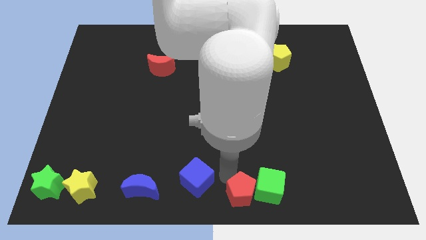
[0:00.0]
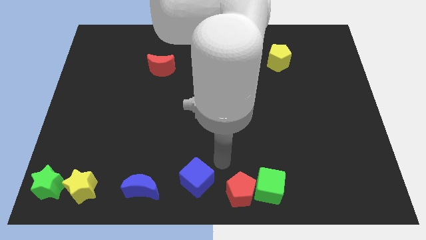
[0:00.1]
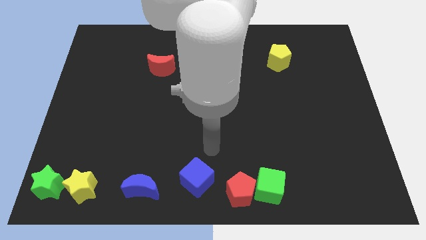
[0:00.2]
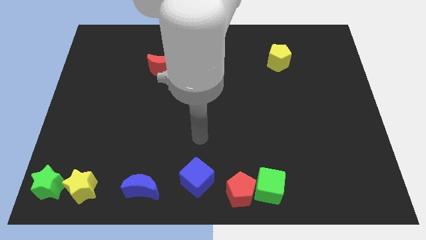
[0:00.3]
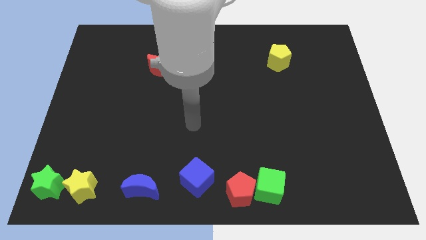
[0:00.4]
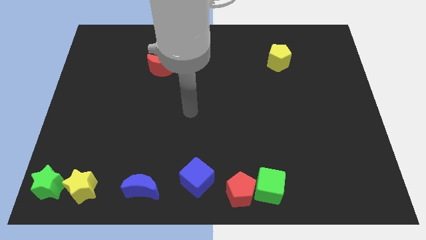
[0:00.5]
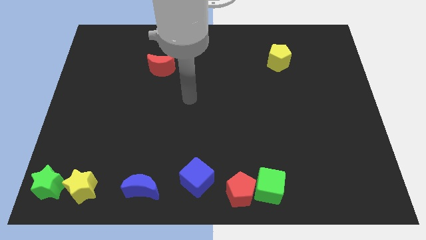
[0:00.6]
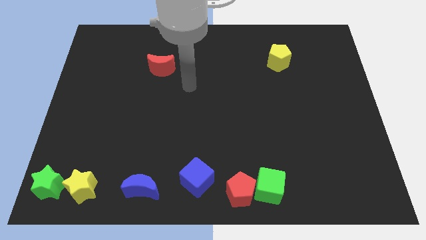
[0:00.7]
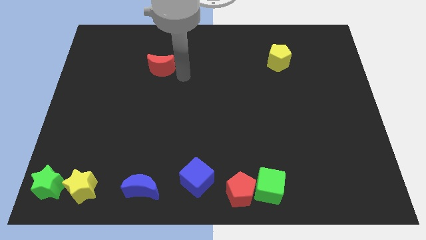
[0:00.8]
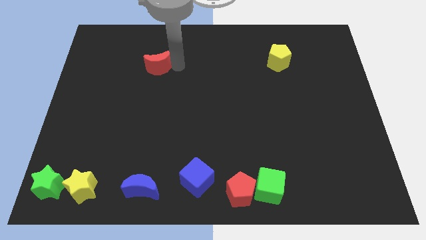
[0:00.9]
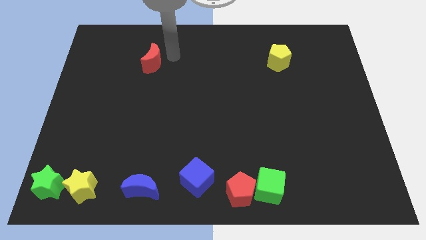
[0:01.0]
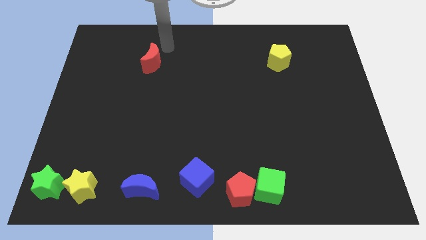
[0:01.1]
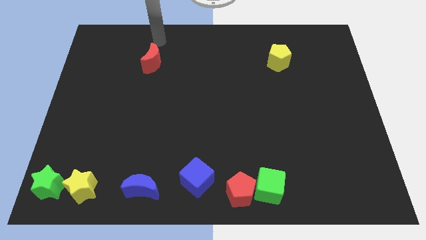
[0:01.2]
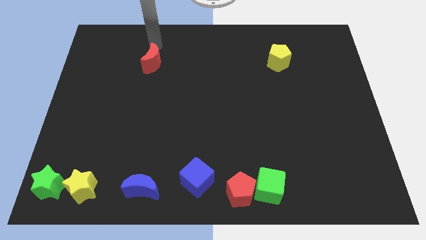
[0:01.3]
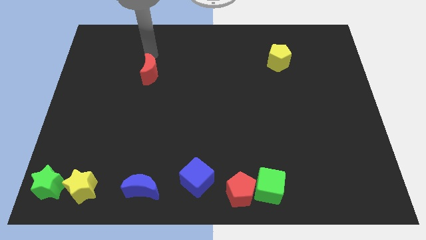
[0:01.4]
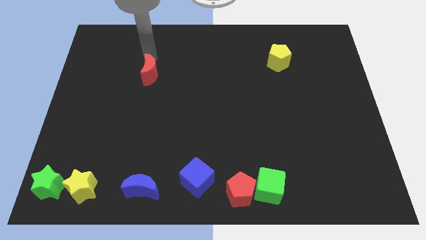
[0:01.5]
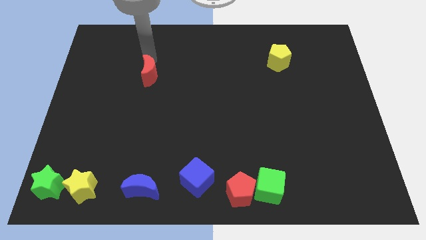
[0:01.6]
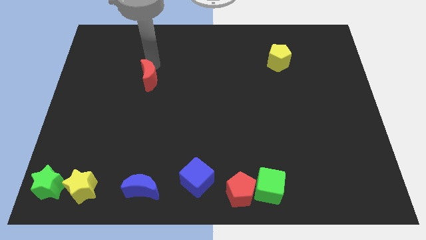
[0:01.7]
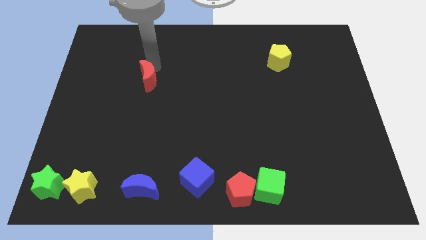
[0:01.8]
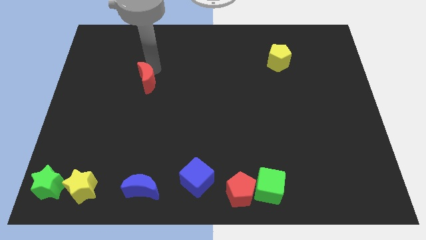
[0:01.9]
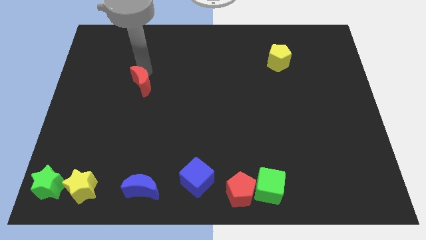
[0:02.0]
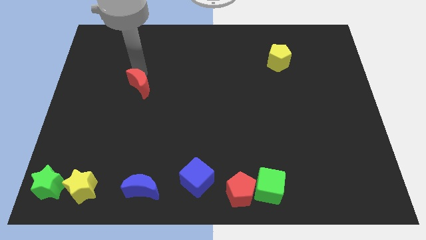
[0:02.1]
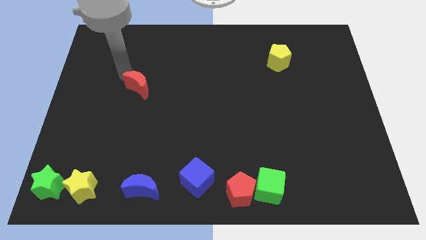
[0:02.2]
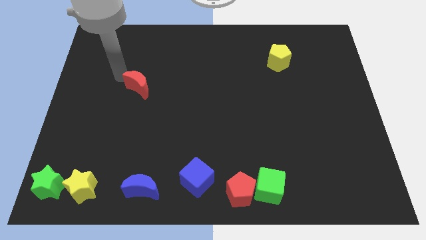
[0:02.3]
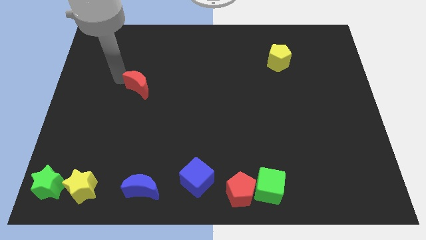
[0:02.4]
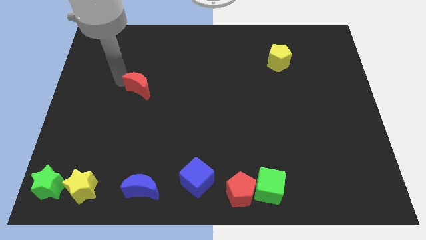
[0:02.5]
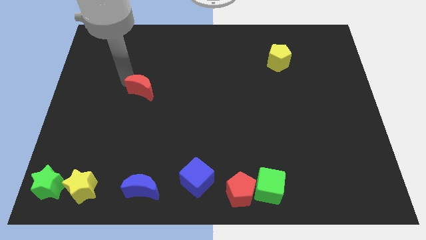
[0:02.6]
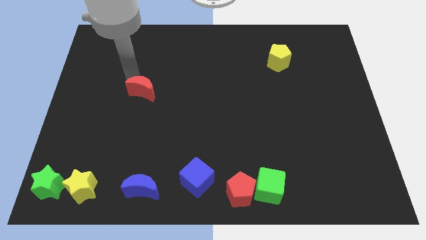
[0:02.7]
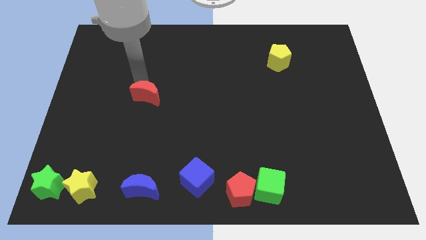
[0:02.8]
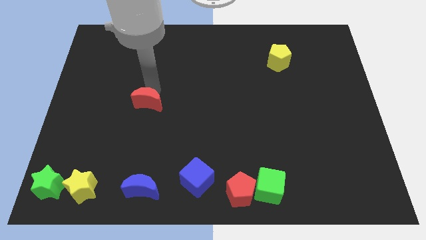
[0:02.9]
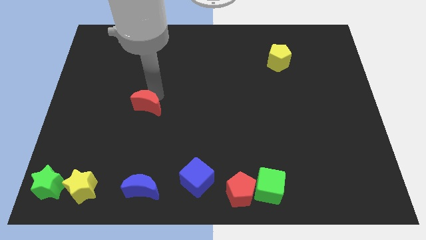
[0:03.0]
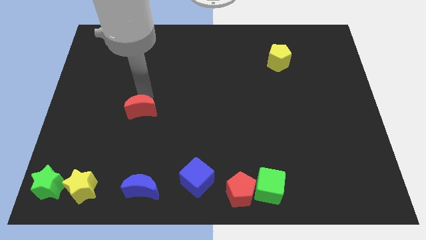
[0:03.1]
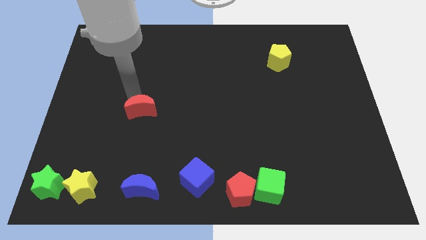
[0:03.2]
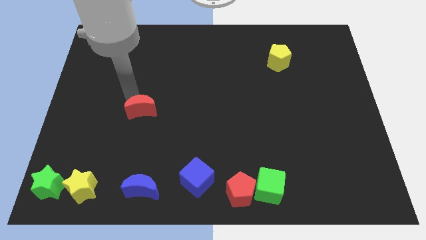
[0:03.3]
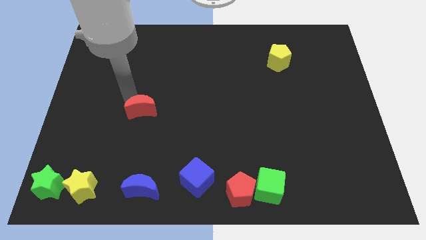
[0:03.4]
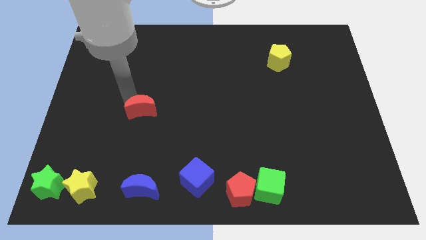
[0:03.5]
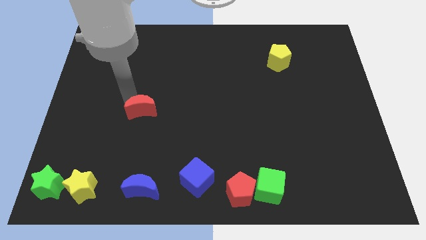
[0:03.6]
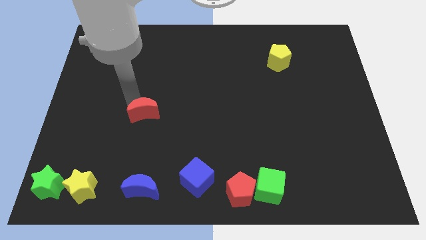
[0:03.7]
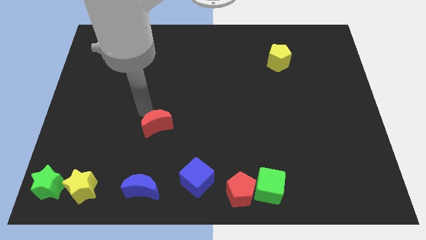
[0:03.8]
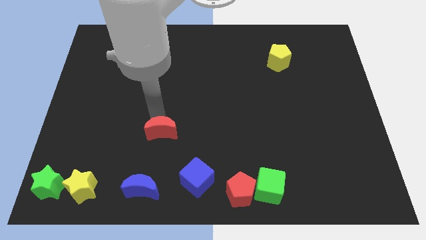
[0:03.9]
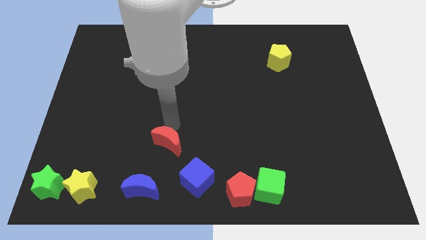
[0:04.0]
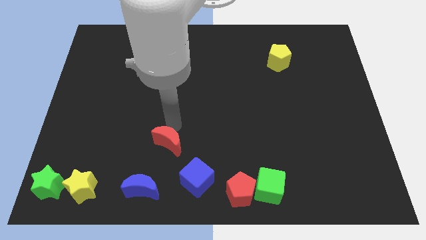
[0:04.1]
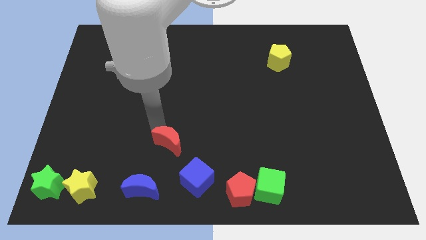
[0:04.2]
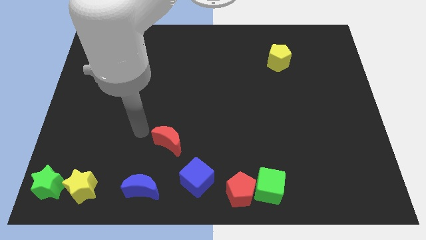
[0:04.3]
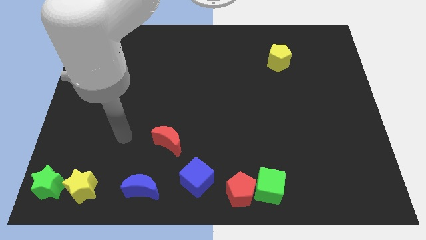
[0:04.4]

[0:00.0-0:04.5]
make a triangle out of blue blocks and the red moon

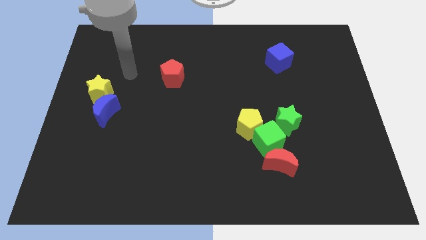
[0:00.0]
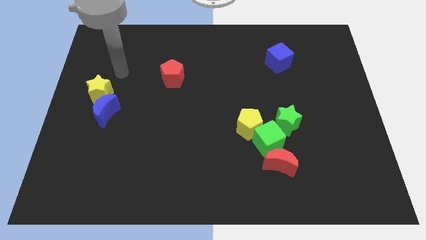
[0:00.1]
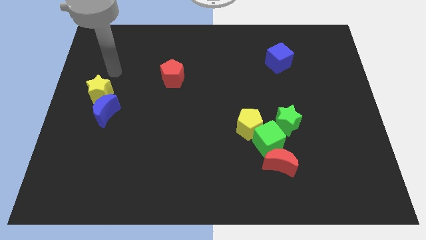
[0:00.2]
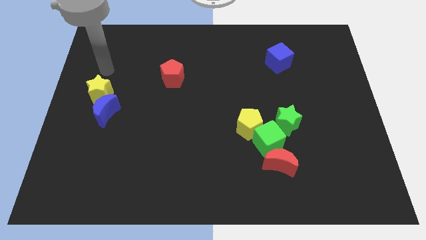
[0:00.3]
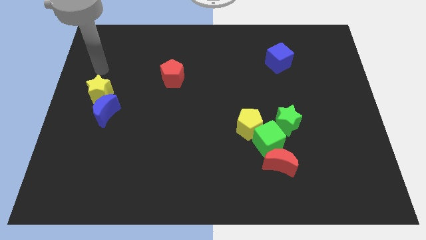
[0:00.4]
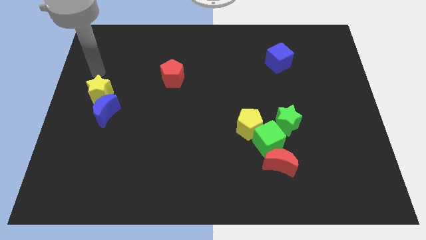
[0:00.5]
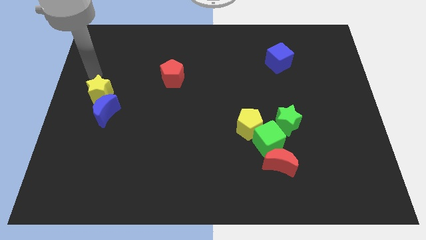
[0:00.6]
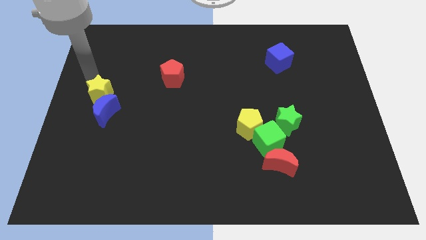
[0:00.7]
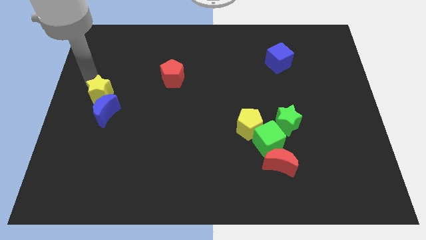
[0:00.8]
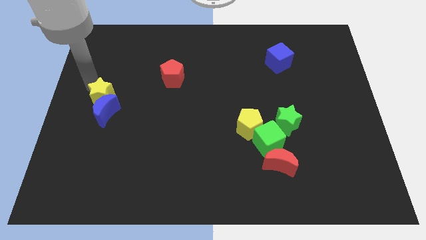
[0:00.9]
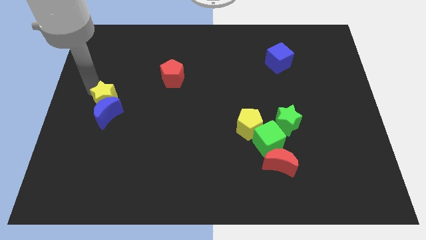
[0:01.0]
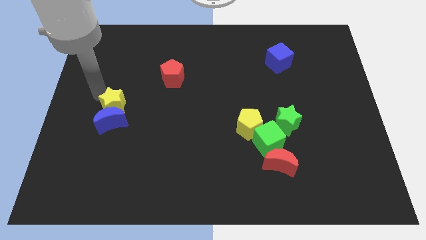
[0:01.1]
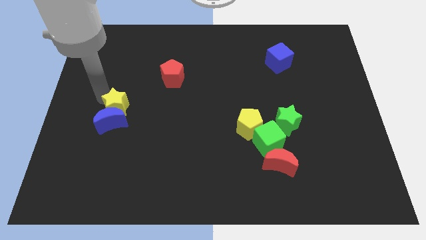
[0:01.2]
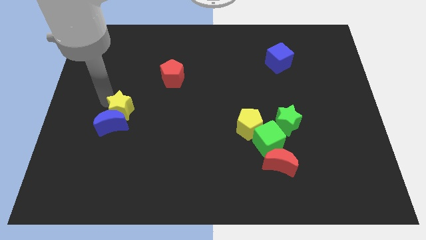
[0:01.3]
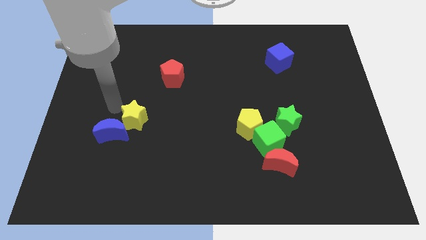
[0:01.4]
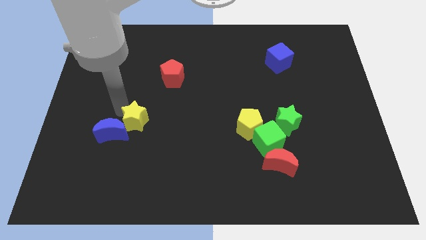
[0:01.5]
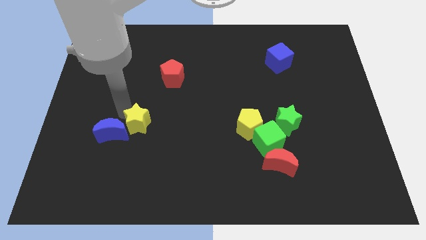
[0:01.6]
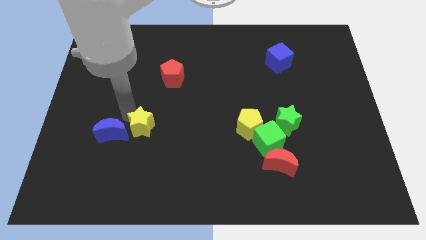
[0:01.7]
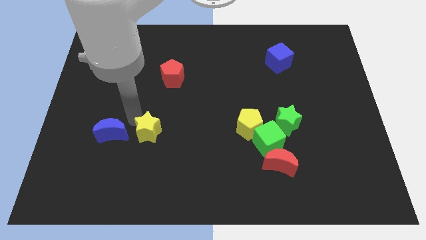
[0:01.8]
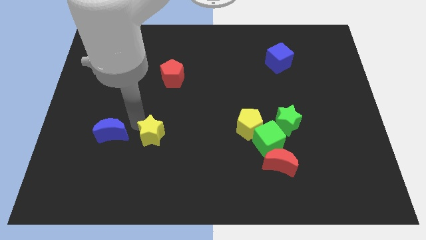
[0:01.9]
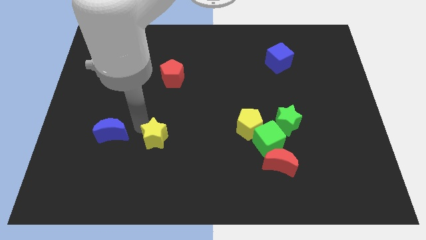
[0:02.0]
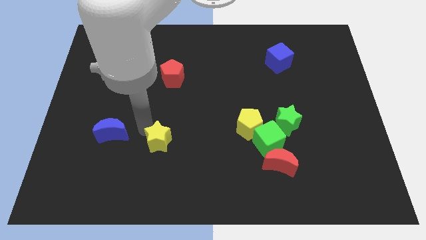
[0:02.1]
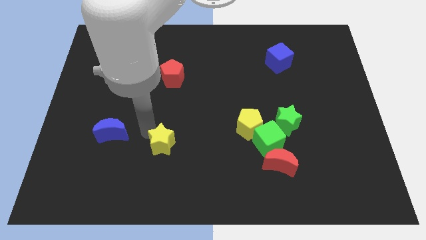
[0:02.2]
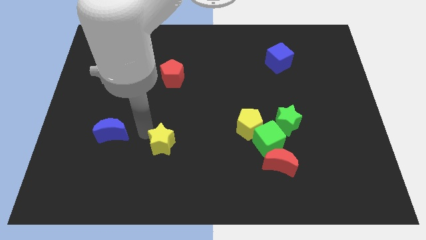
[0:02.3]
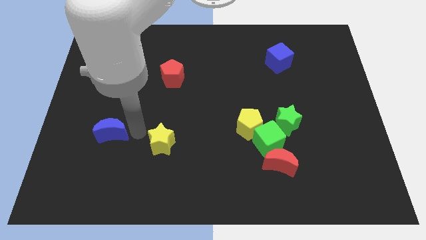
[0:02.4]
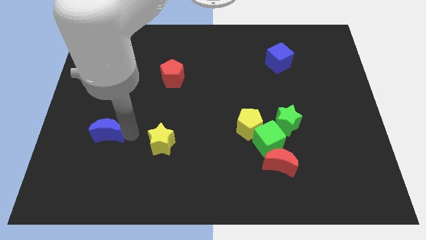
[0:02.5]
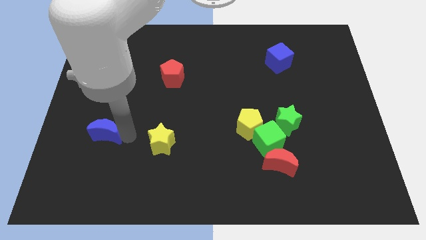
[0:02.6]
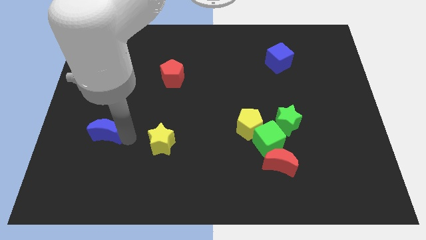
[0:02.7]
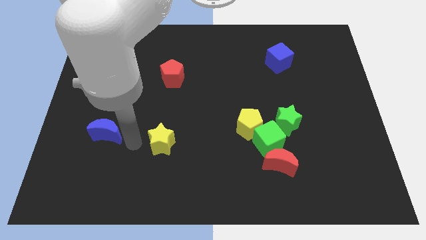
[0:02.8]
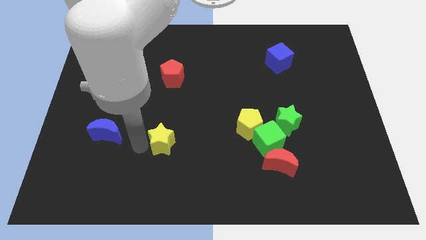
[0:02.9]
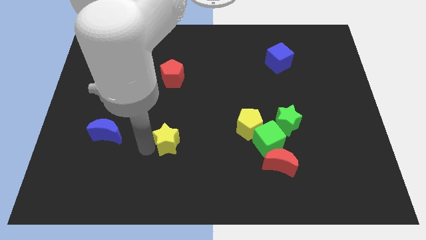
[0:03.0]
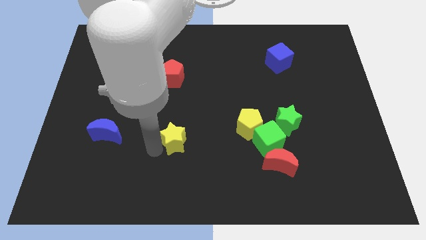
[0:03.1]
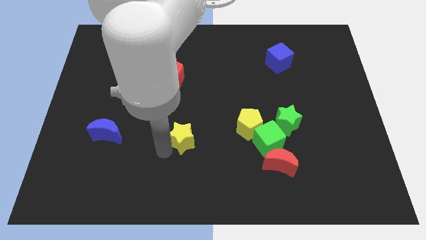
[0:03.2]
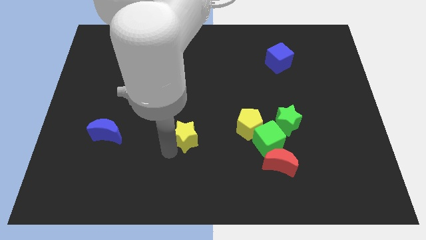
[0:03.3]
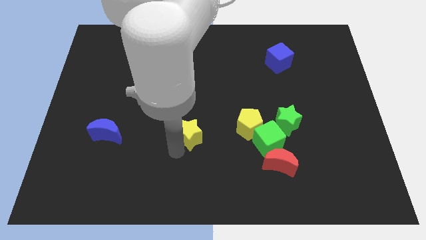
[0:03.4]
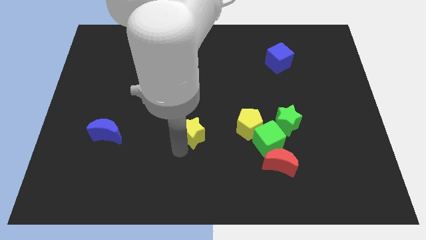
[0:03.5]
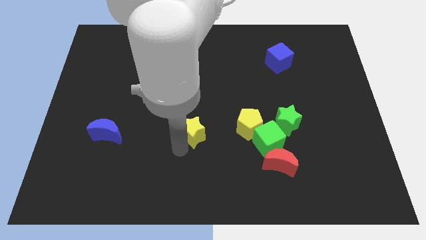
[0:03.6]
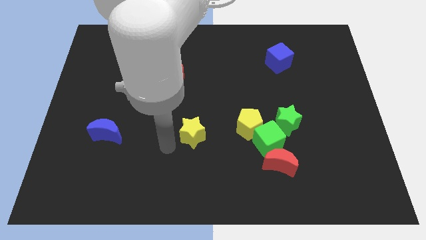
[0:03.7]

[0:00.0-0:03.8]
push the yellow star to the bottoom center

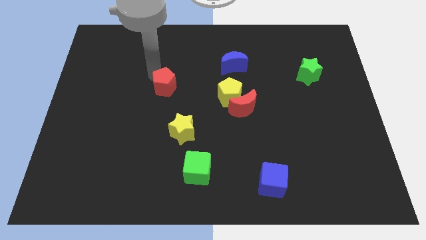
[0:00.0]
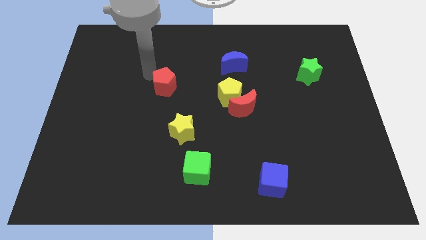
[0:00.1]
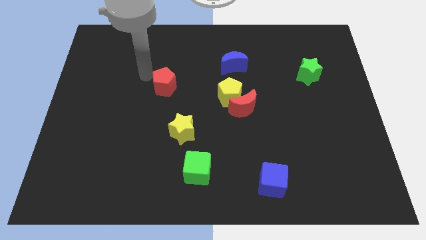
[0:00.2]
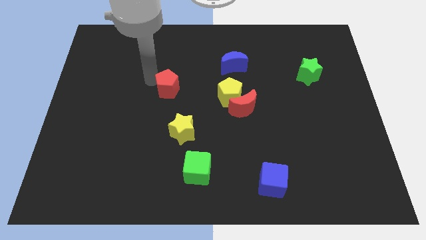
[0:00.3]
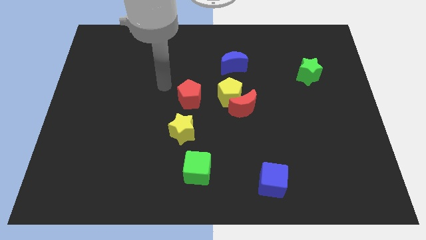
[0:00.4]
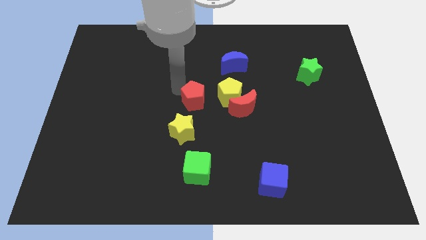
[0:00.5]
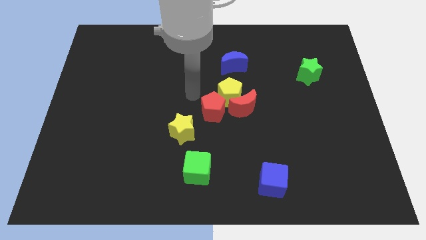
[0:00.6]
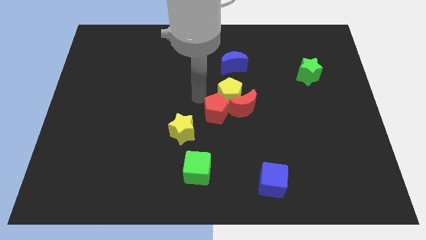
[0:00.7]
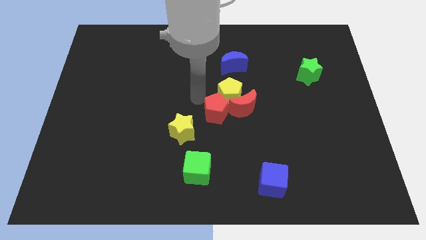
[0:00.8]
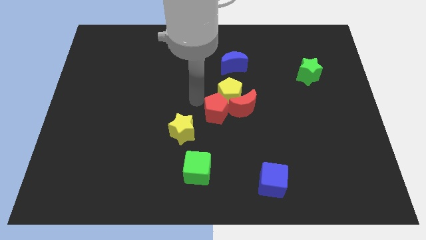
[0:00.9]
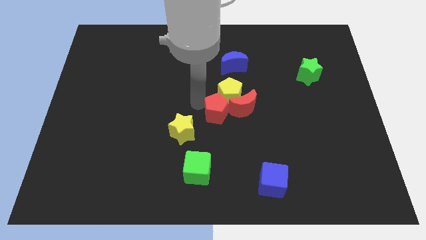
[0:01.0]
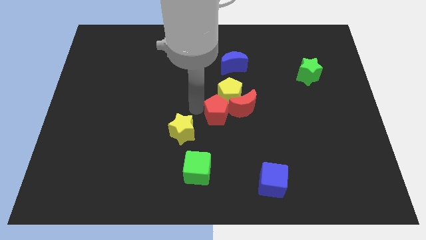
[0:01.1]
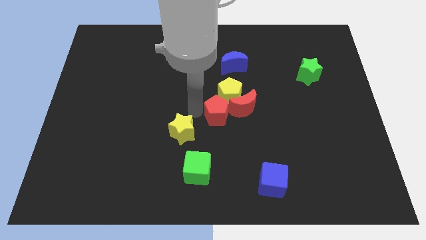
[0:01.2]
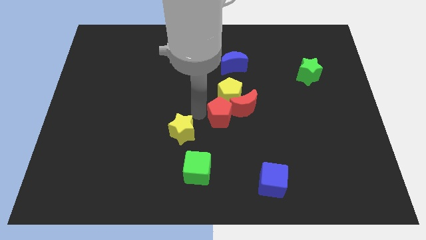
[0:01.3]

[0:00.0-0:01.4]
place red pentagon left of red moon
